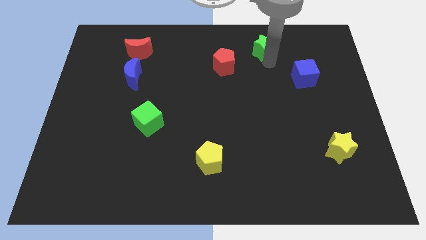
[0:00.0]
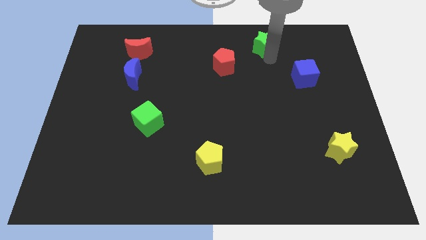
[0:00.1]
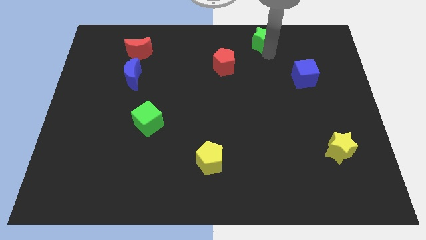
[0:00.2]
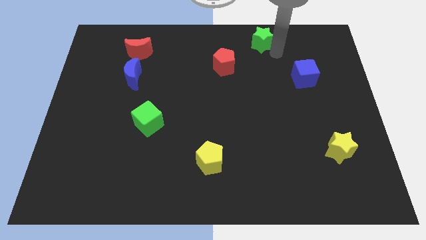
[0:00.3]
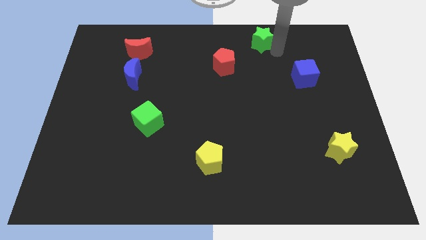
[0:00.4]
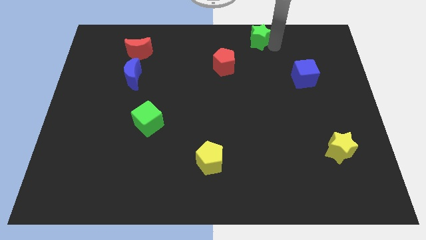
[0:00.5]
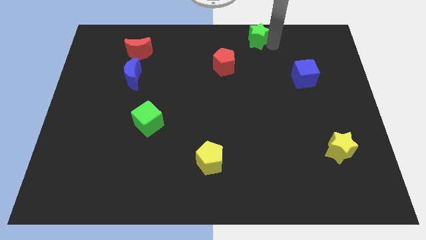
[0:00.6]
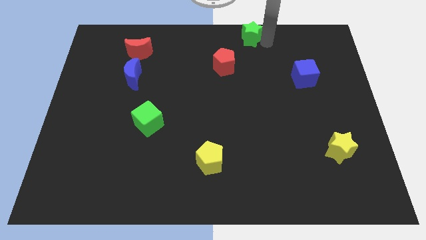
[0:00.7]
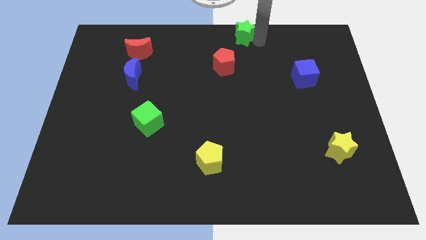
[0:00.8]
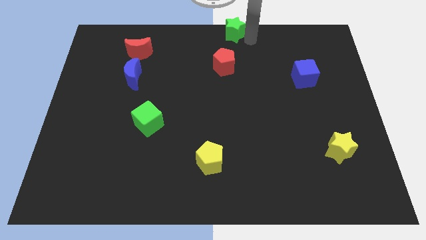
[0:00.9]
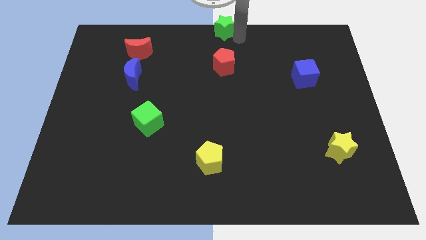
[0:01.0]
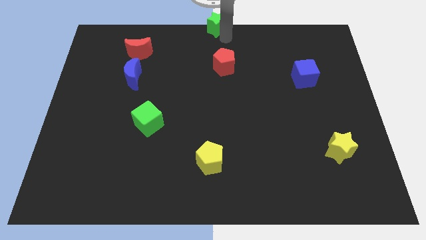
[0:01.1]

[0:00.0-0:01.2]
place the green star vertically above the red pentagon

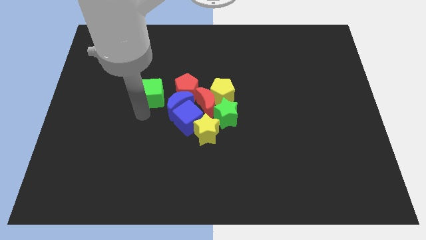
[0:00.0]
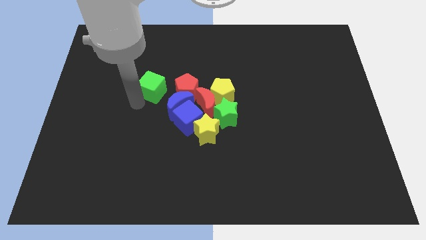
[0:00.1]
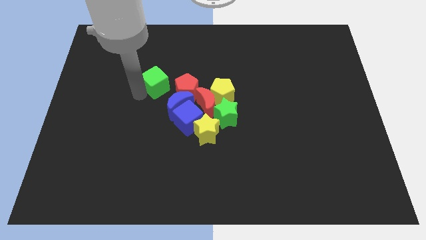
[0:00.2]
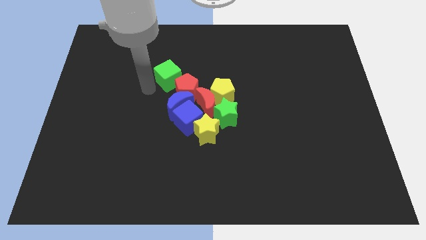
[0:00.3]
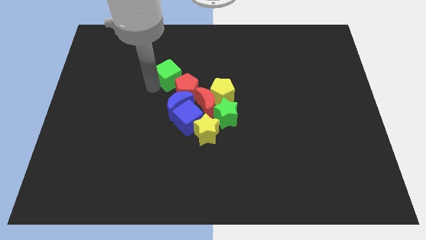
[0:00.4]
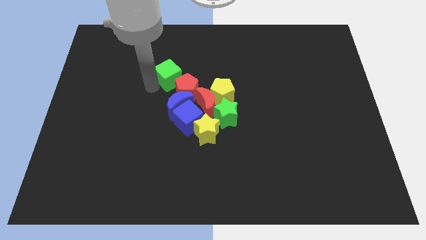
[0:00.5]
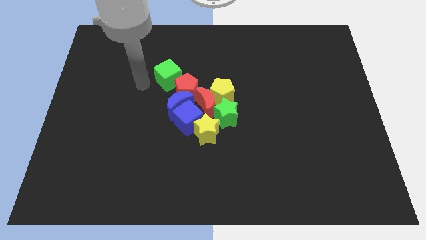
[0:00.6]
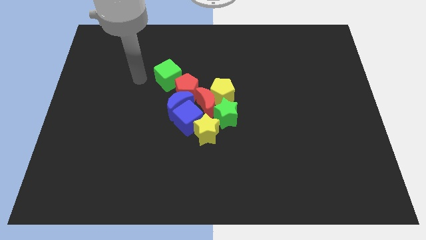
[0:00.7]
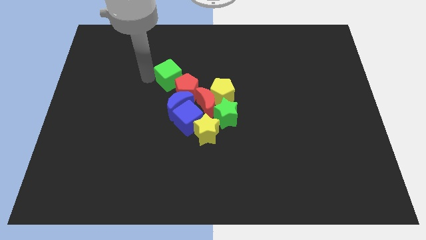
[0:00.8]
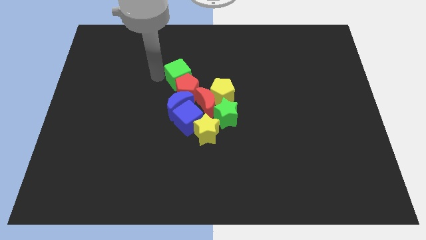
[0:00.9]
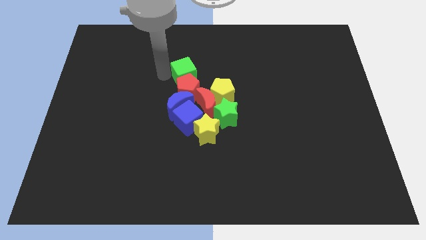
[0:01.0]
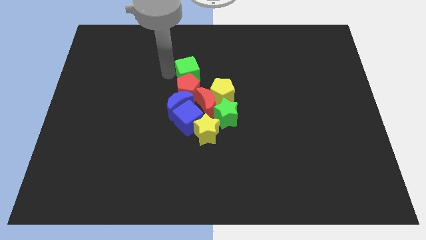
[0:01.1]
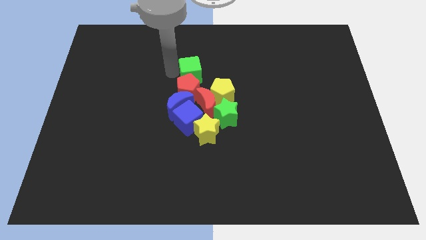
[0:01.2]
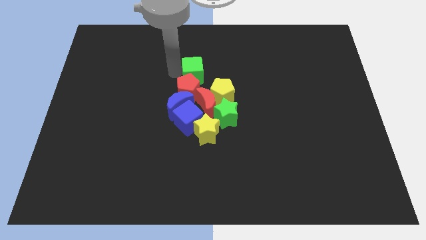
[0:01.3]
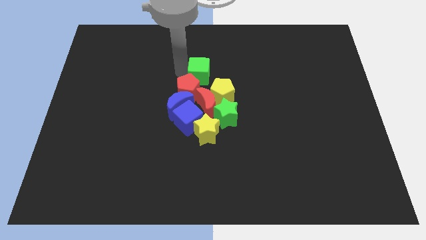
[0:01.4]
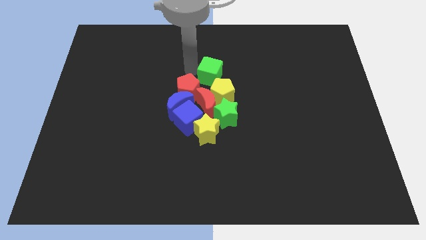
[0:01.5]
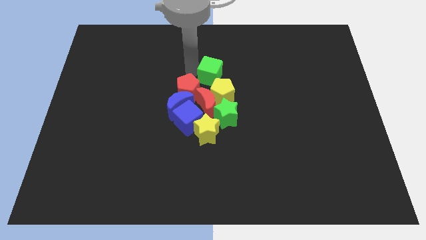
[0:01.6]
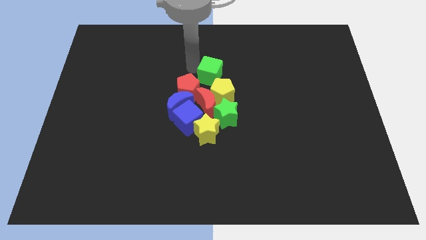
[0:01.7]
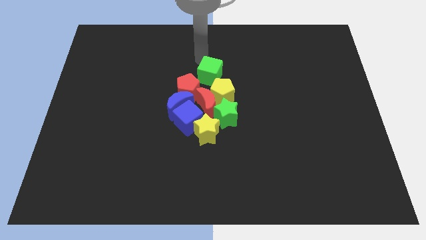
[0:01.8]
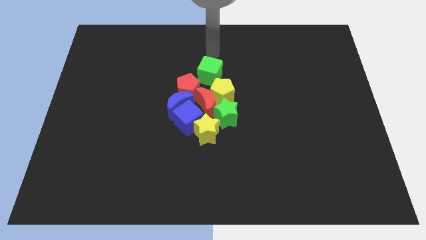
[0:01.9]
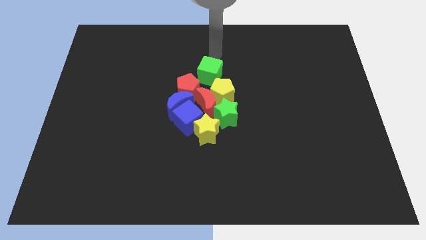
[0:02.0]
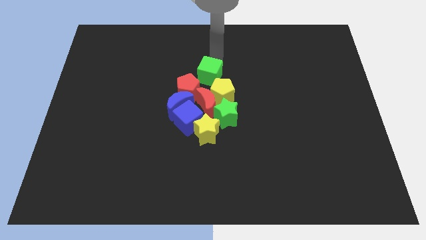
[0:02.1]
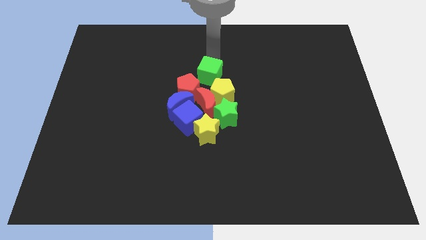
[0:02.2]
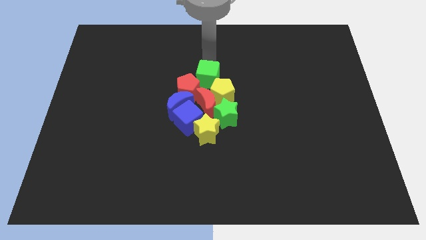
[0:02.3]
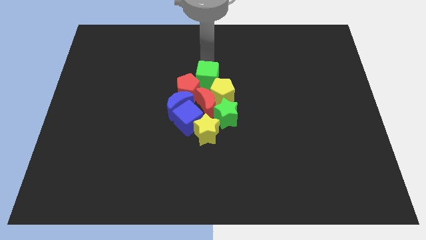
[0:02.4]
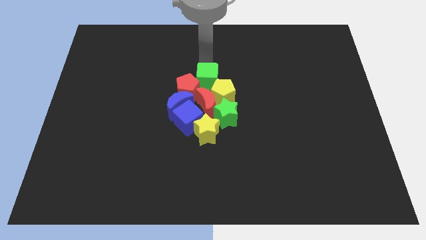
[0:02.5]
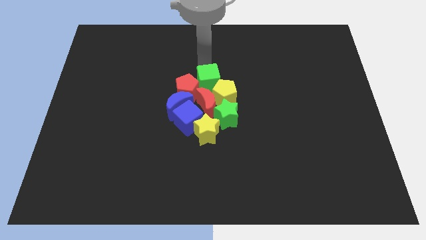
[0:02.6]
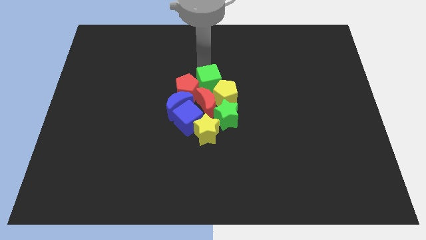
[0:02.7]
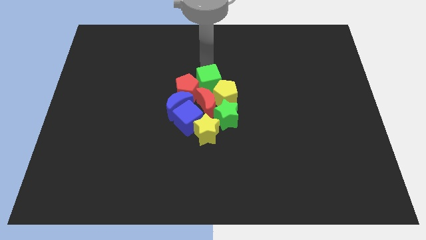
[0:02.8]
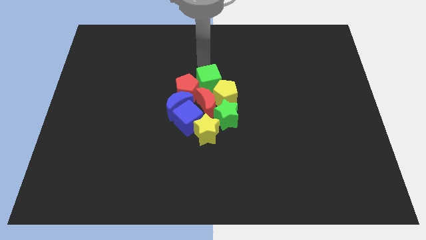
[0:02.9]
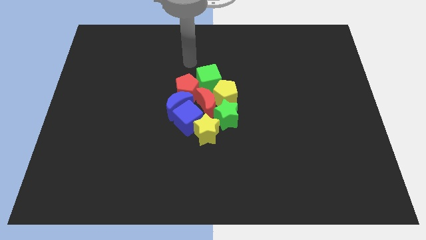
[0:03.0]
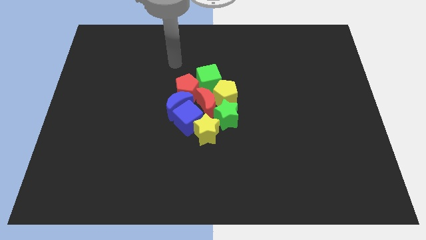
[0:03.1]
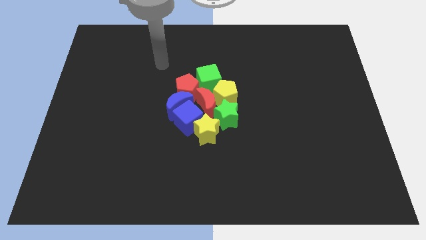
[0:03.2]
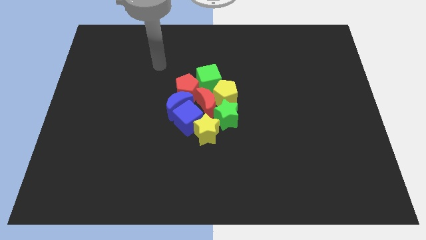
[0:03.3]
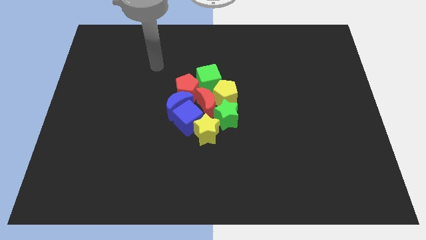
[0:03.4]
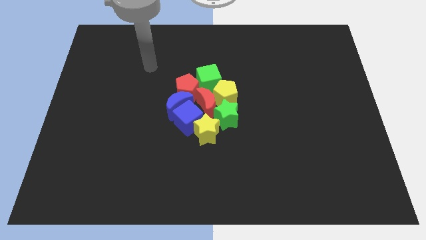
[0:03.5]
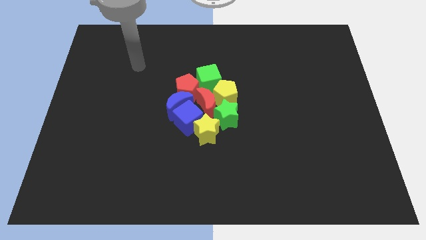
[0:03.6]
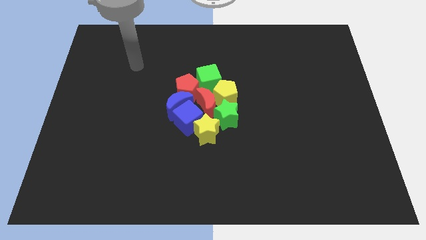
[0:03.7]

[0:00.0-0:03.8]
slide the green cube into the yellow pentagon

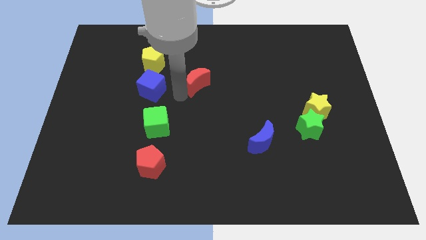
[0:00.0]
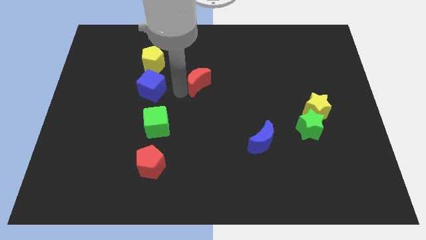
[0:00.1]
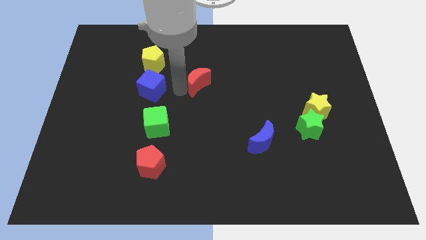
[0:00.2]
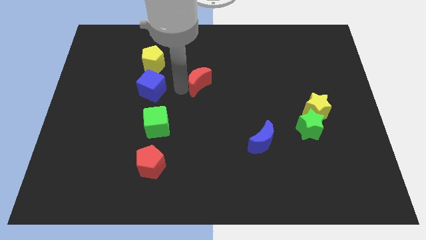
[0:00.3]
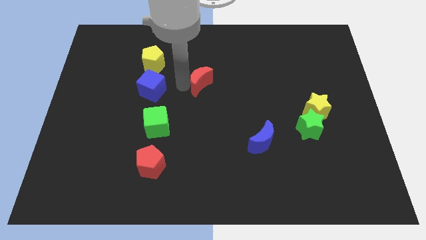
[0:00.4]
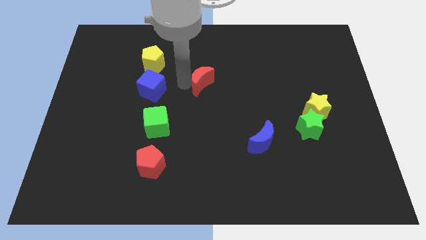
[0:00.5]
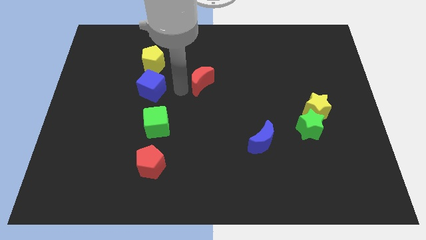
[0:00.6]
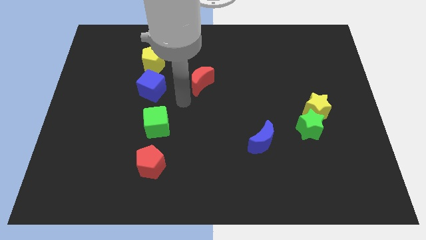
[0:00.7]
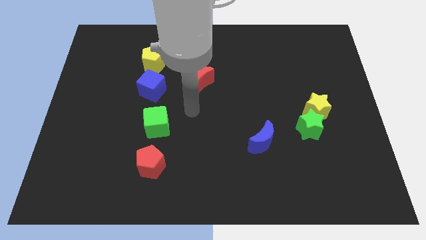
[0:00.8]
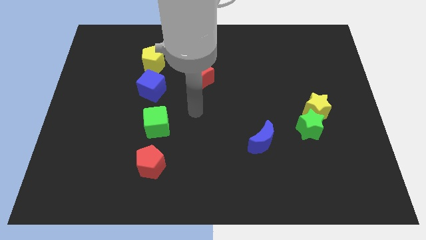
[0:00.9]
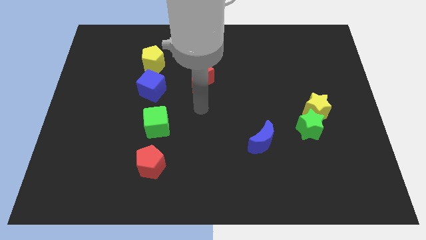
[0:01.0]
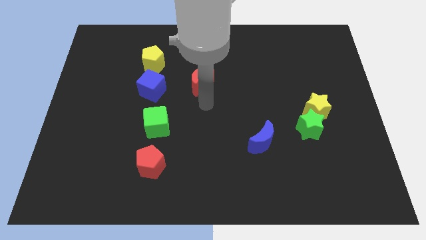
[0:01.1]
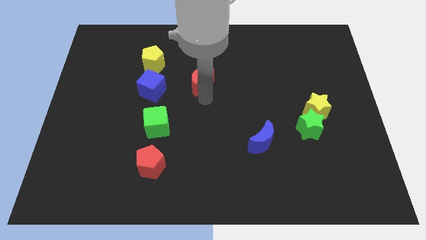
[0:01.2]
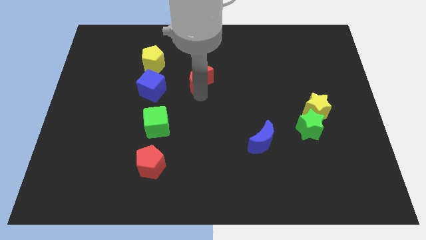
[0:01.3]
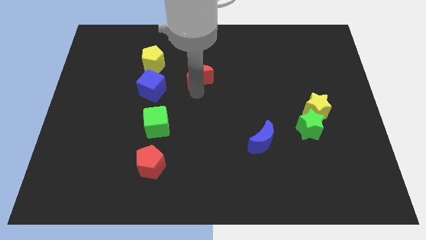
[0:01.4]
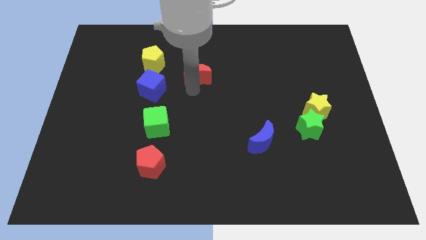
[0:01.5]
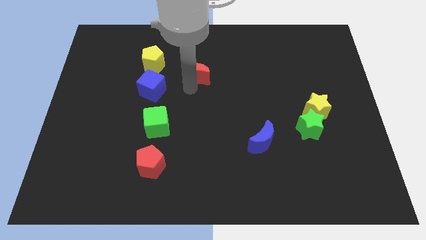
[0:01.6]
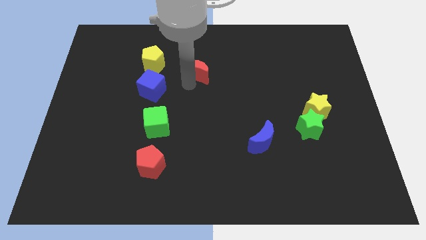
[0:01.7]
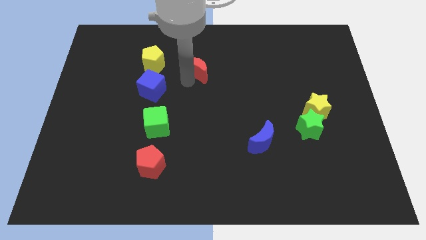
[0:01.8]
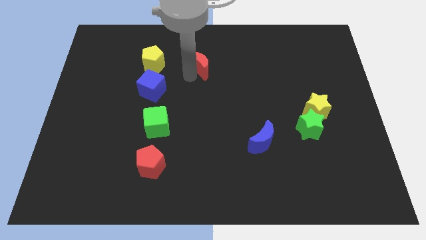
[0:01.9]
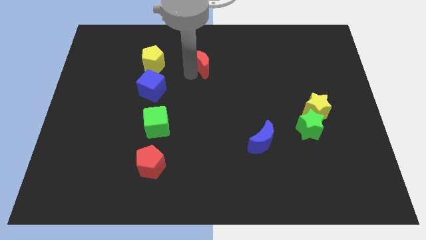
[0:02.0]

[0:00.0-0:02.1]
move the red crescent to the right of the yellow pentagon

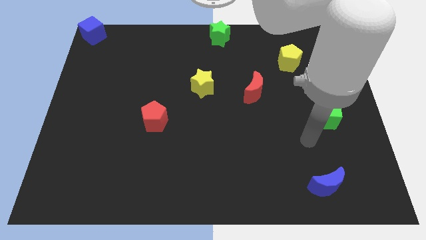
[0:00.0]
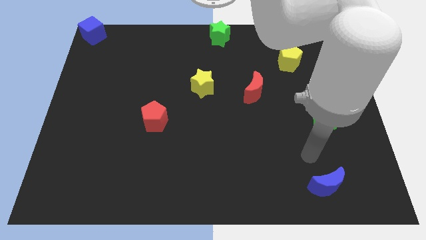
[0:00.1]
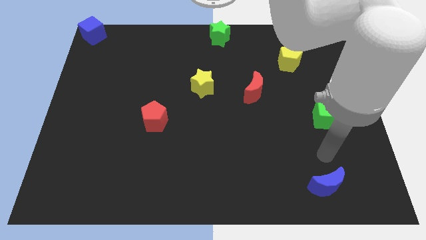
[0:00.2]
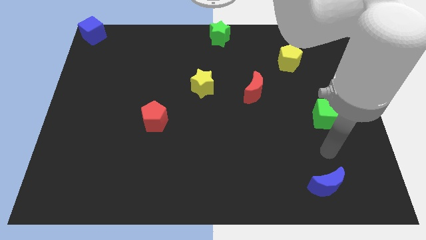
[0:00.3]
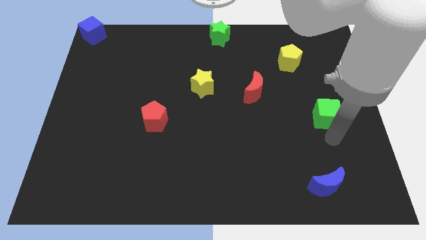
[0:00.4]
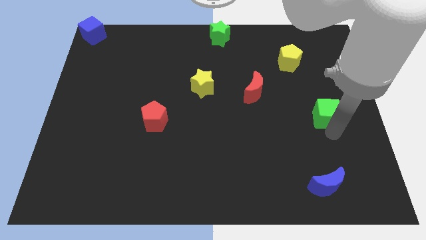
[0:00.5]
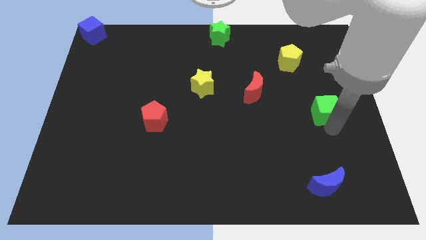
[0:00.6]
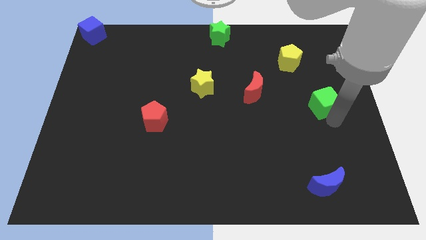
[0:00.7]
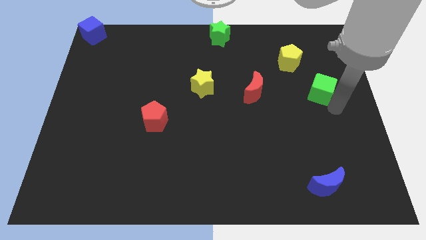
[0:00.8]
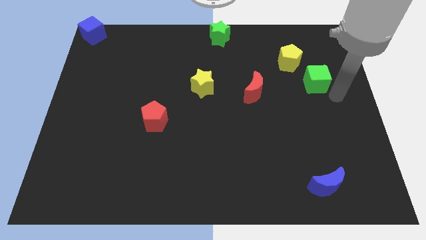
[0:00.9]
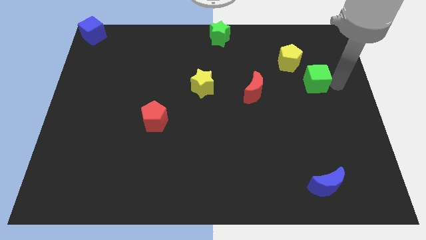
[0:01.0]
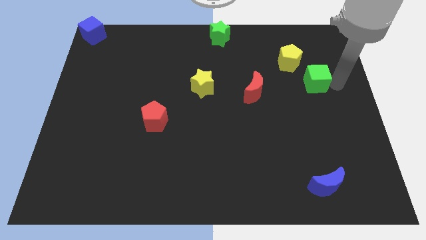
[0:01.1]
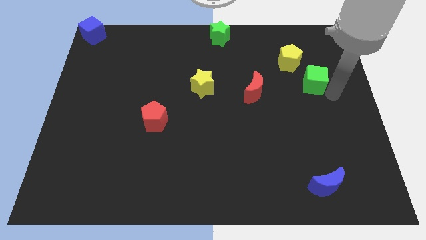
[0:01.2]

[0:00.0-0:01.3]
move green cube towards yellow pentagon
